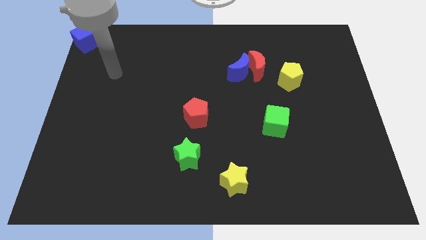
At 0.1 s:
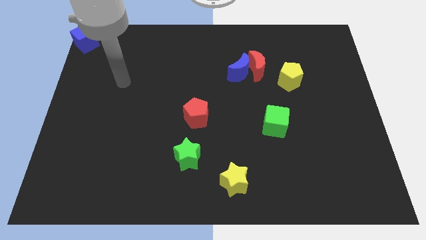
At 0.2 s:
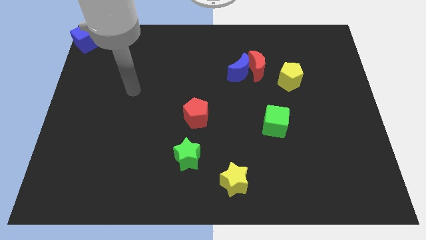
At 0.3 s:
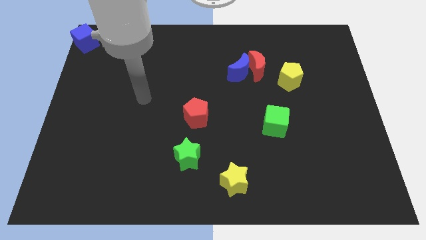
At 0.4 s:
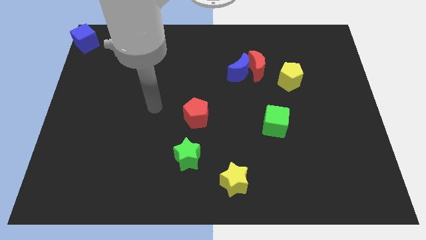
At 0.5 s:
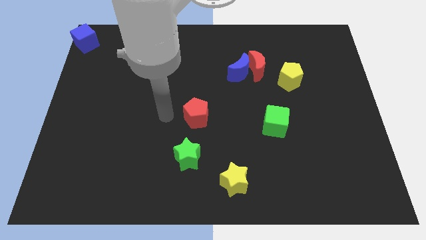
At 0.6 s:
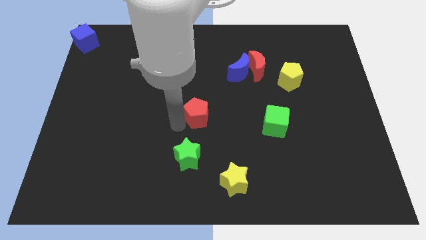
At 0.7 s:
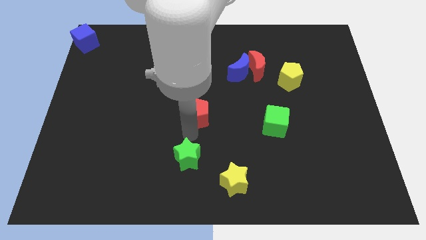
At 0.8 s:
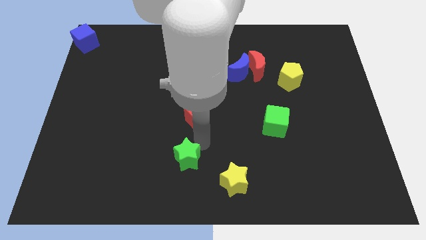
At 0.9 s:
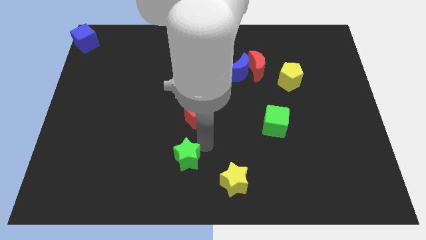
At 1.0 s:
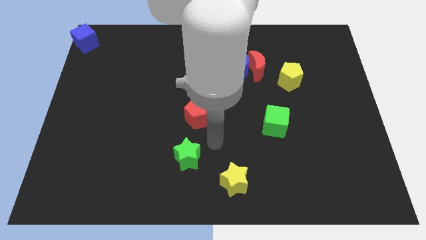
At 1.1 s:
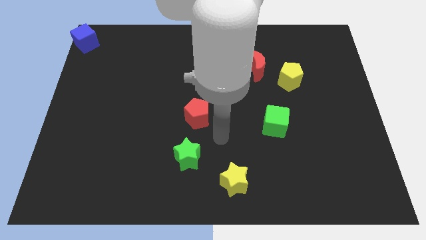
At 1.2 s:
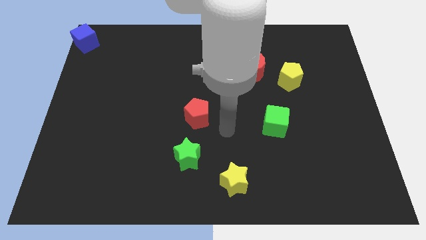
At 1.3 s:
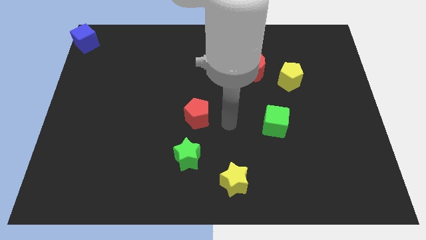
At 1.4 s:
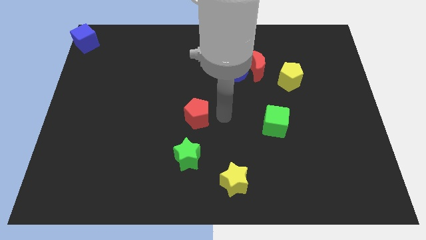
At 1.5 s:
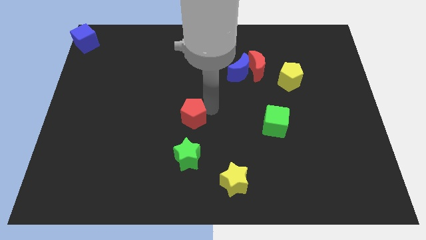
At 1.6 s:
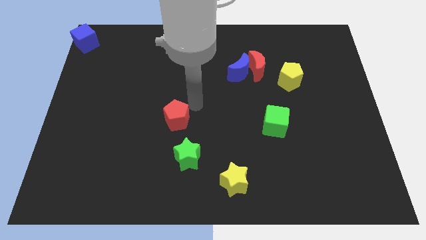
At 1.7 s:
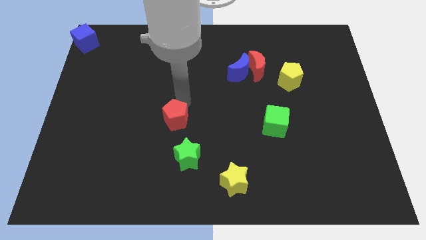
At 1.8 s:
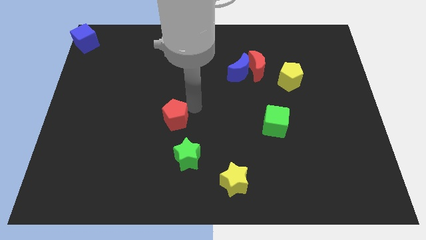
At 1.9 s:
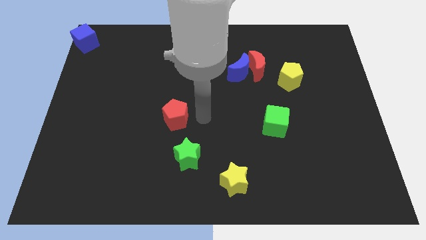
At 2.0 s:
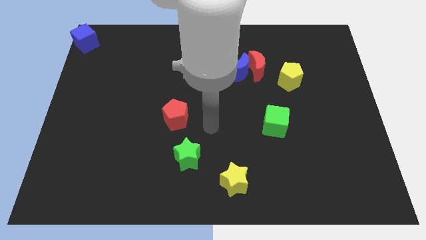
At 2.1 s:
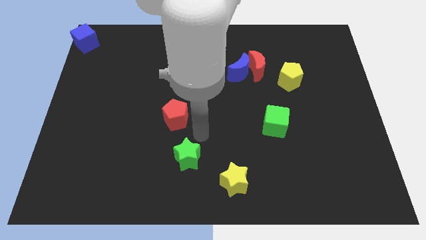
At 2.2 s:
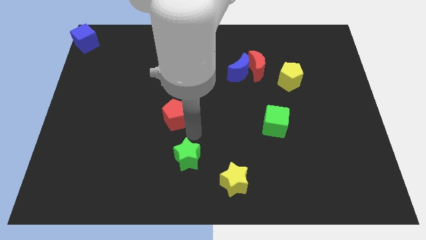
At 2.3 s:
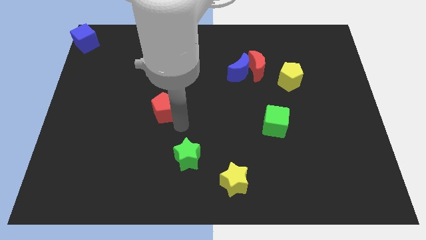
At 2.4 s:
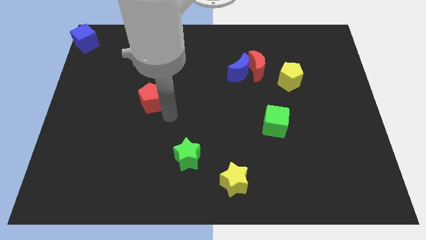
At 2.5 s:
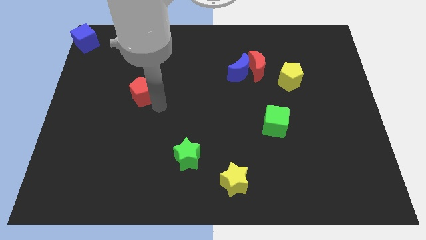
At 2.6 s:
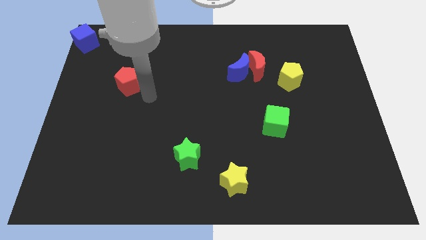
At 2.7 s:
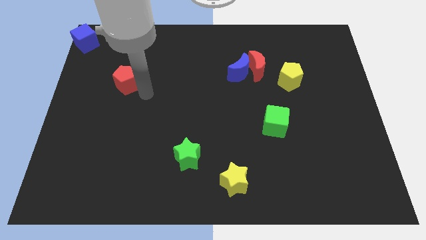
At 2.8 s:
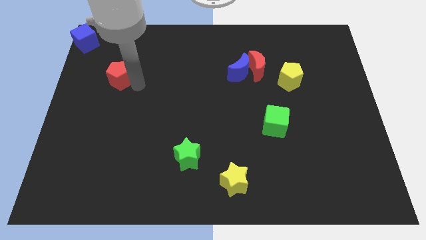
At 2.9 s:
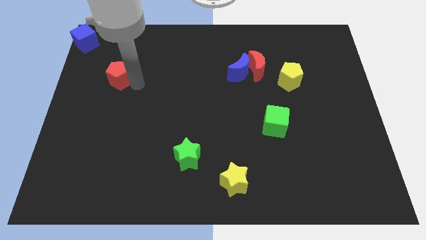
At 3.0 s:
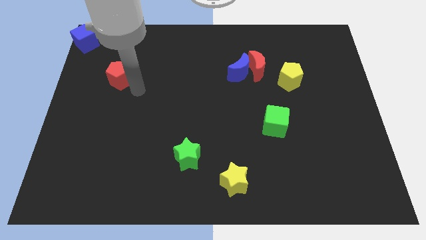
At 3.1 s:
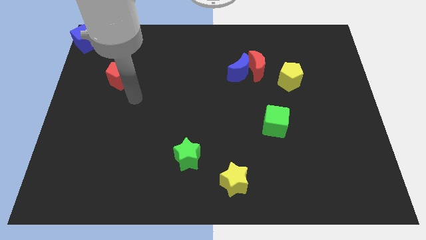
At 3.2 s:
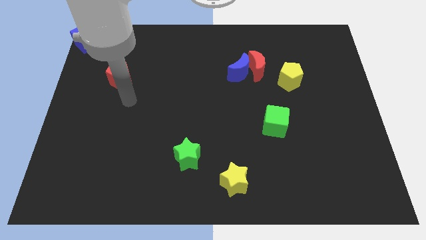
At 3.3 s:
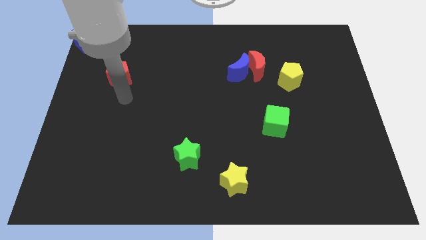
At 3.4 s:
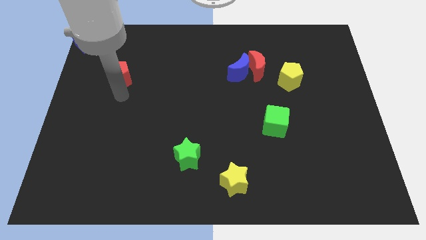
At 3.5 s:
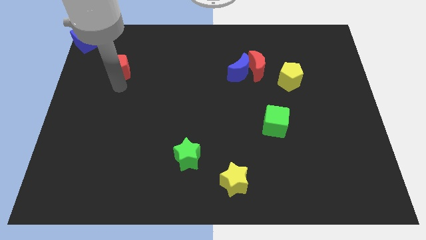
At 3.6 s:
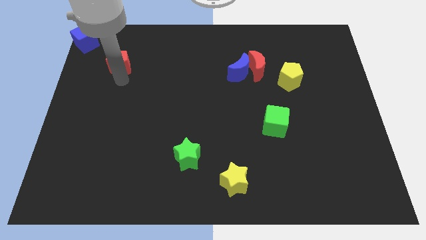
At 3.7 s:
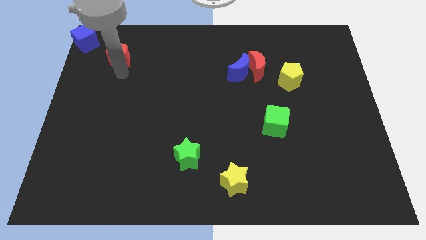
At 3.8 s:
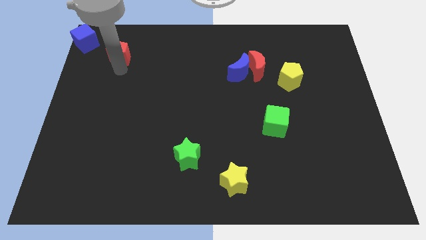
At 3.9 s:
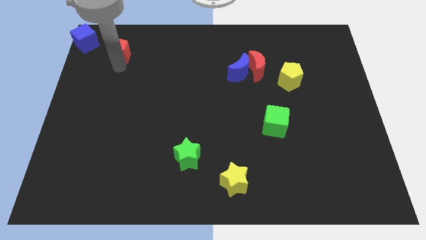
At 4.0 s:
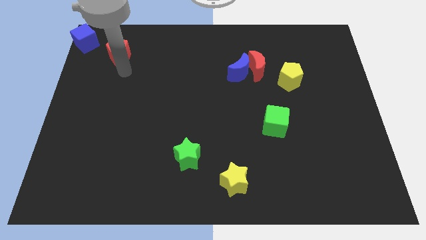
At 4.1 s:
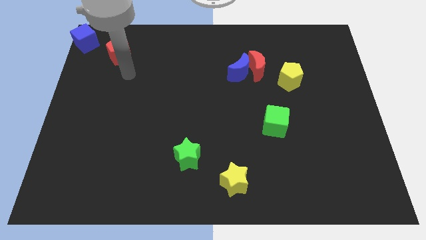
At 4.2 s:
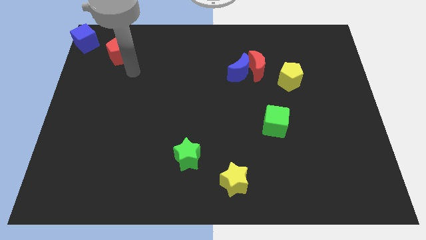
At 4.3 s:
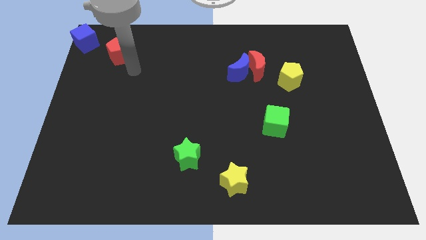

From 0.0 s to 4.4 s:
push the red pentagon to the top right corner of the board

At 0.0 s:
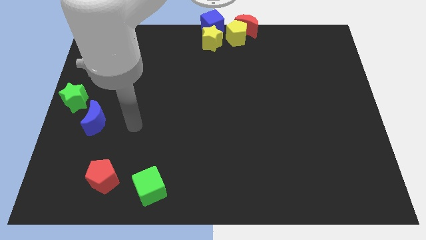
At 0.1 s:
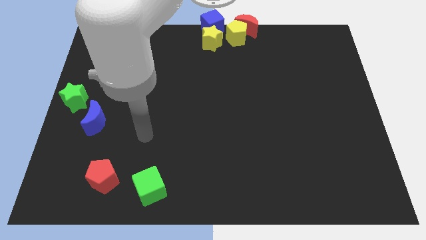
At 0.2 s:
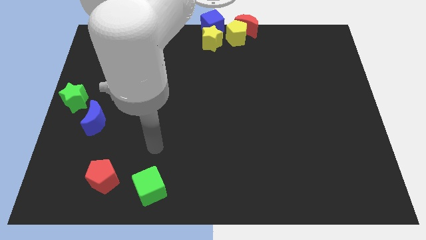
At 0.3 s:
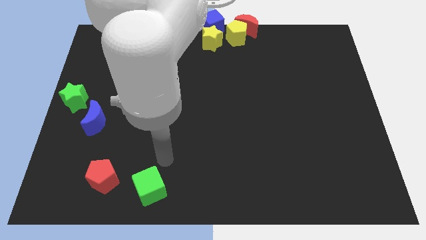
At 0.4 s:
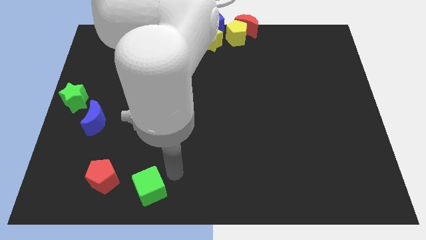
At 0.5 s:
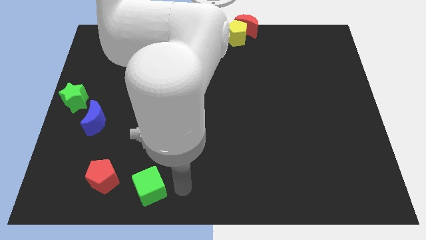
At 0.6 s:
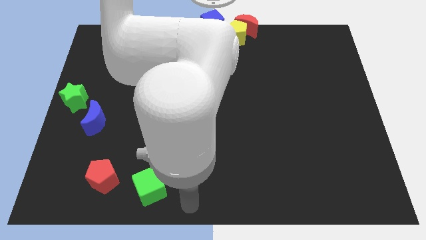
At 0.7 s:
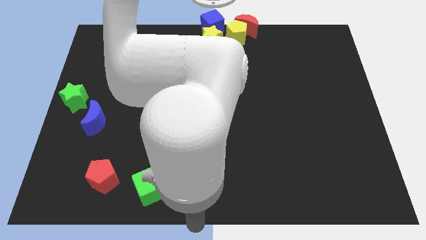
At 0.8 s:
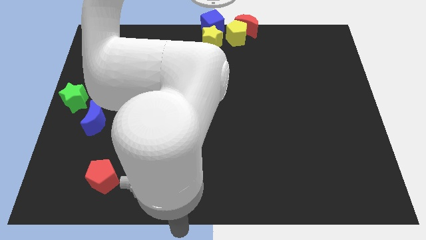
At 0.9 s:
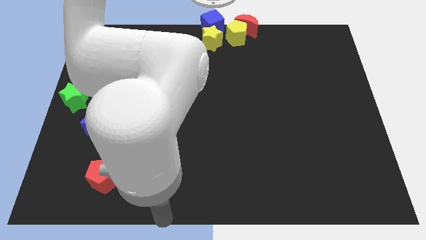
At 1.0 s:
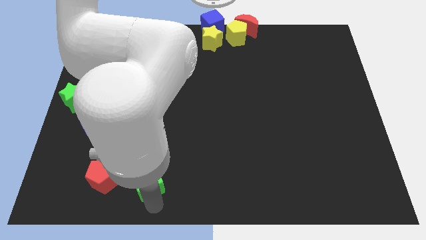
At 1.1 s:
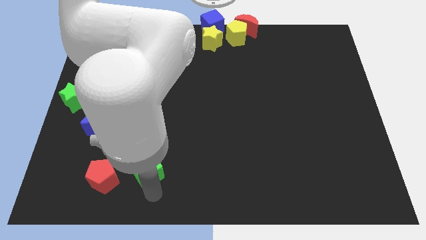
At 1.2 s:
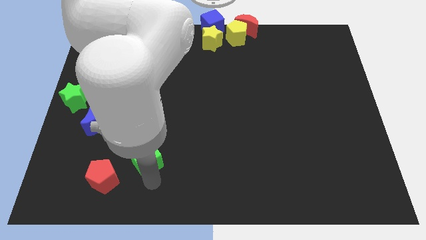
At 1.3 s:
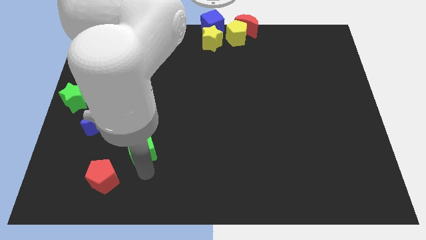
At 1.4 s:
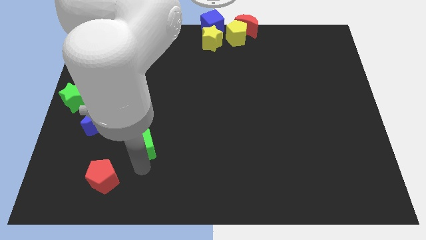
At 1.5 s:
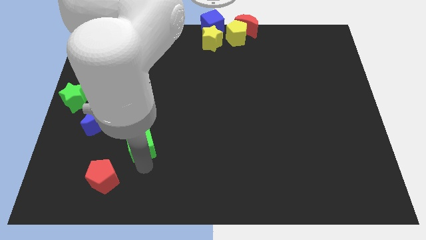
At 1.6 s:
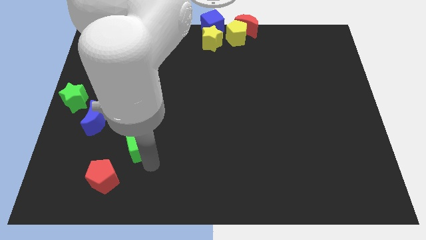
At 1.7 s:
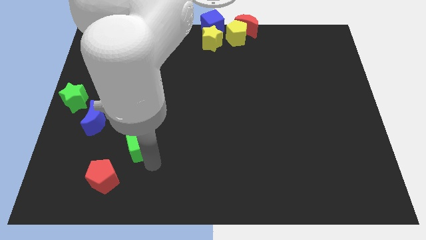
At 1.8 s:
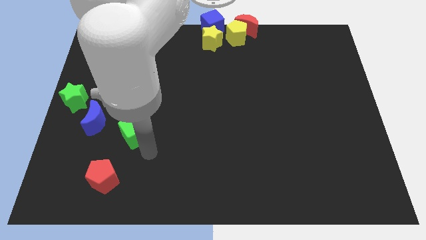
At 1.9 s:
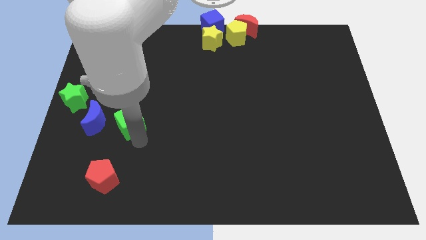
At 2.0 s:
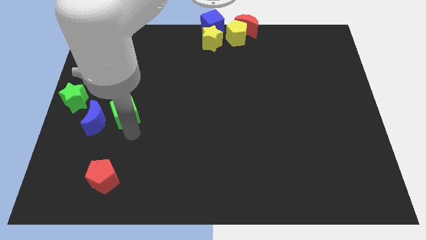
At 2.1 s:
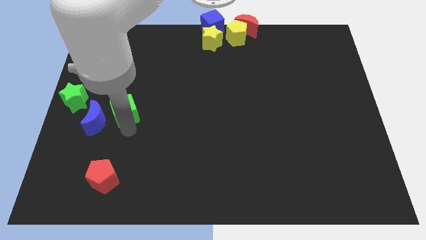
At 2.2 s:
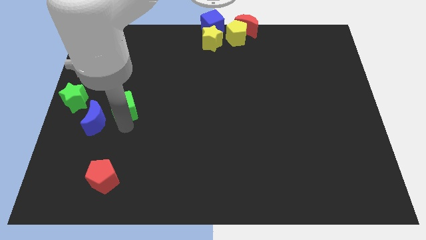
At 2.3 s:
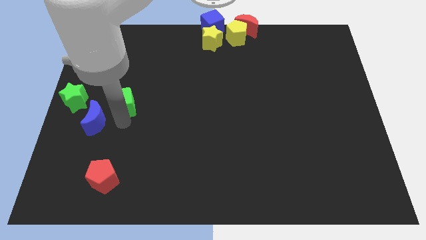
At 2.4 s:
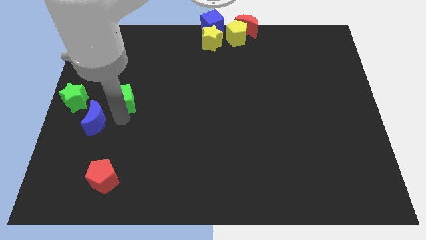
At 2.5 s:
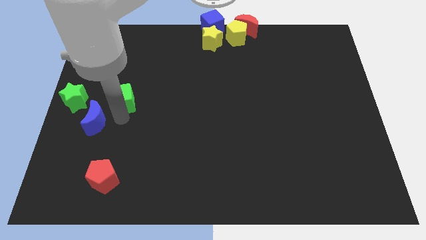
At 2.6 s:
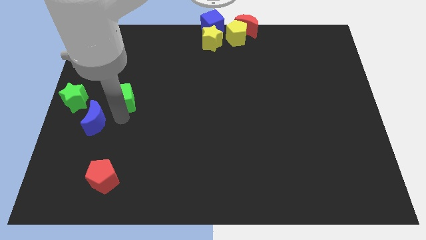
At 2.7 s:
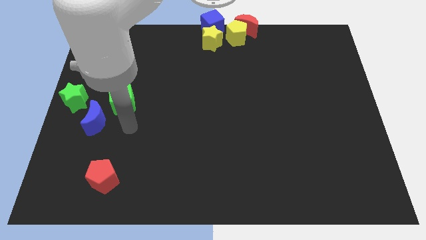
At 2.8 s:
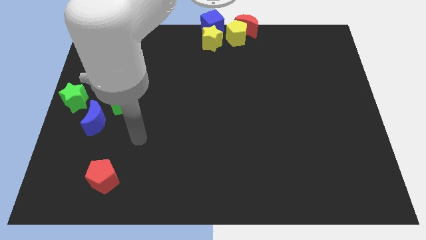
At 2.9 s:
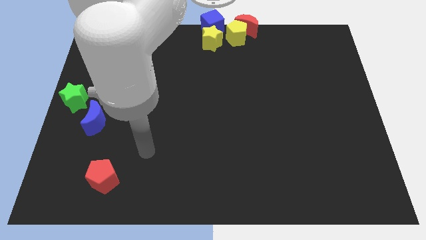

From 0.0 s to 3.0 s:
place the green cube diagonal to the blue moon

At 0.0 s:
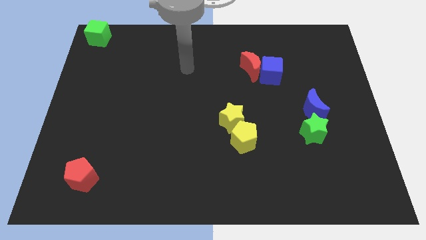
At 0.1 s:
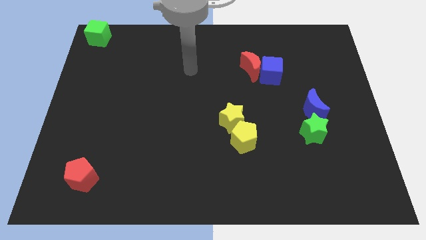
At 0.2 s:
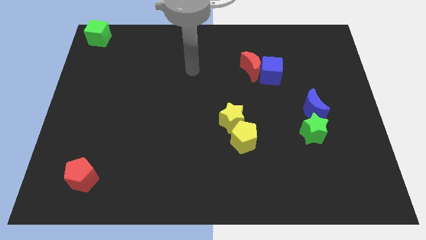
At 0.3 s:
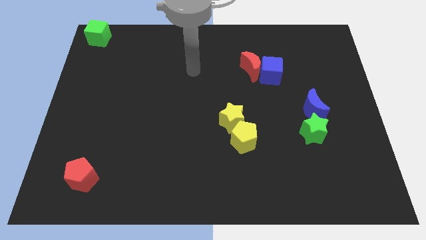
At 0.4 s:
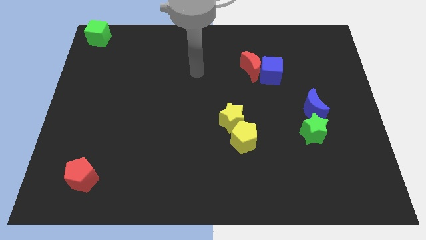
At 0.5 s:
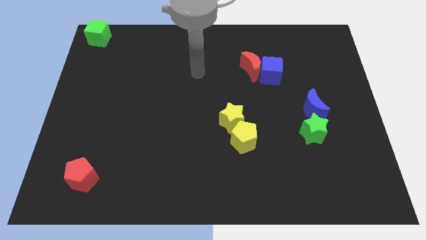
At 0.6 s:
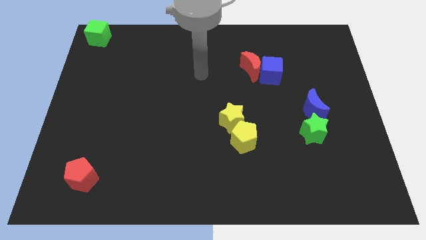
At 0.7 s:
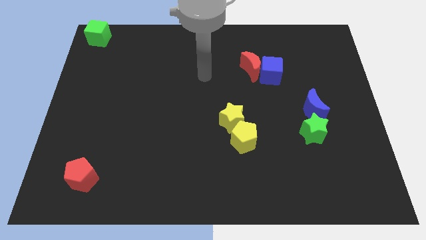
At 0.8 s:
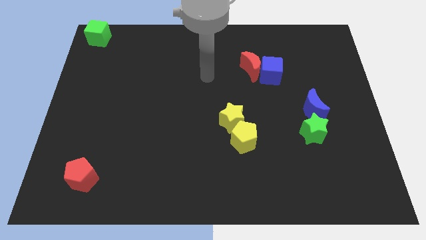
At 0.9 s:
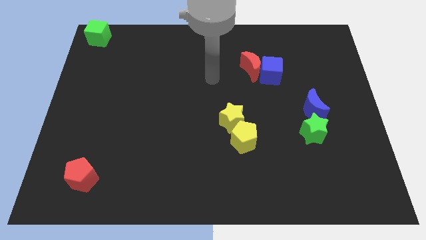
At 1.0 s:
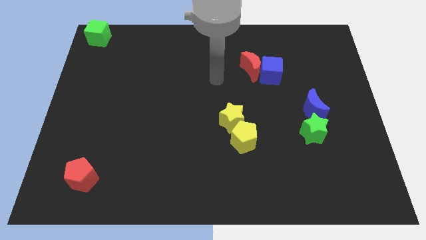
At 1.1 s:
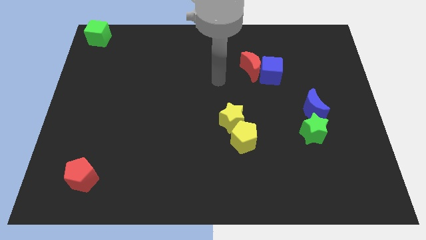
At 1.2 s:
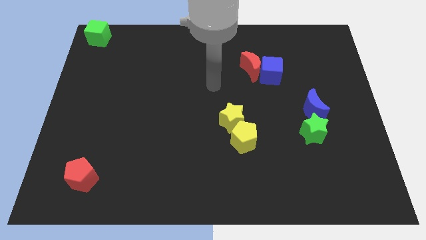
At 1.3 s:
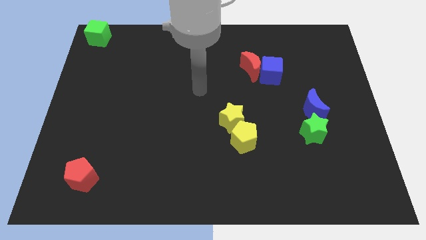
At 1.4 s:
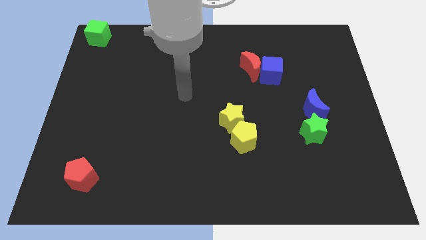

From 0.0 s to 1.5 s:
place arm at center
